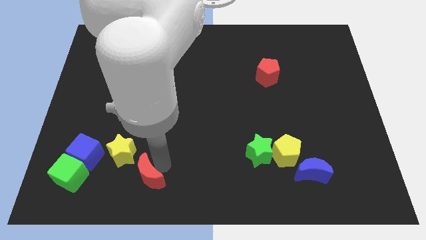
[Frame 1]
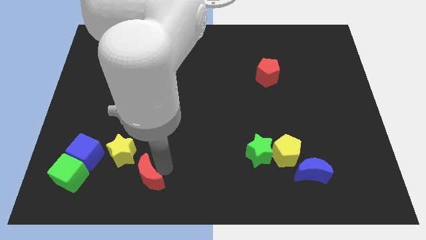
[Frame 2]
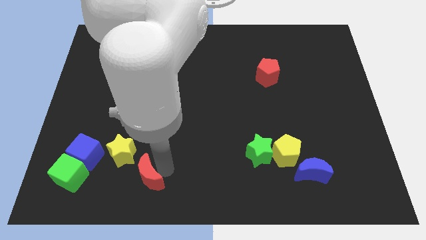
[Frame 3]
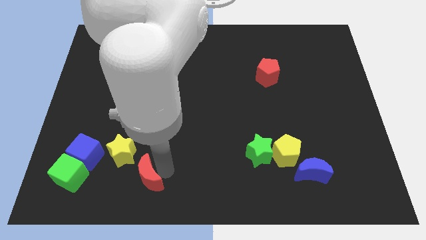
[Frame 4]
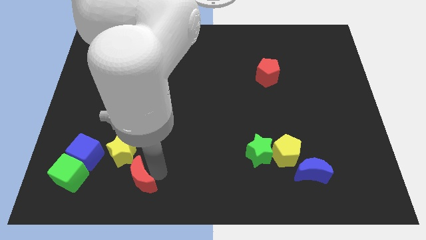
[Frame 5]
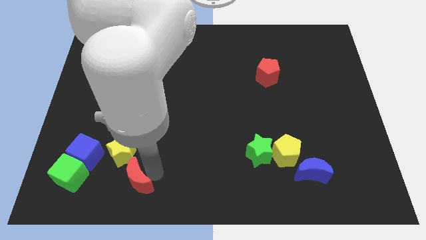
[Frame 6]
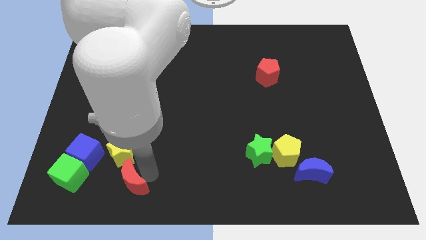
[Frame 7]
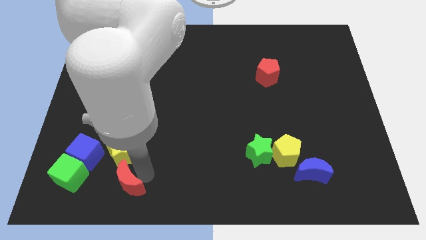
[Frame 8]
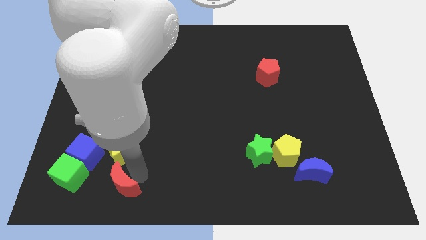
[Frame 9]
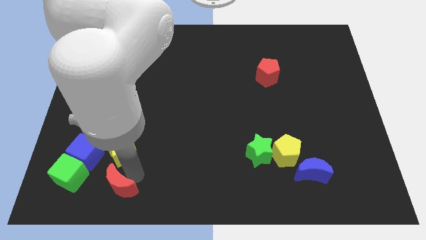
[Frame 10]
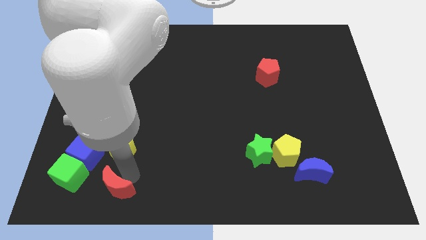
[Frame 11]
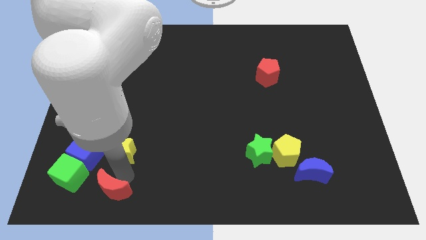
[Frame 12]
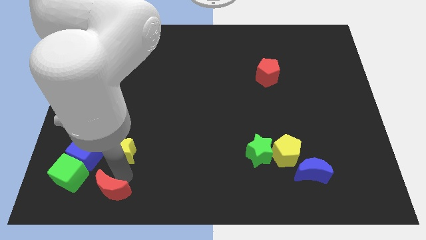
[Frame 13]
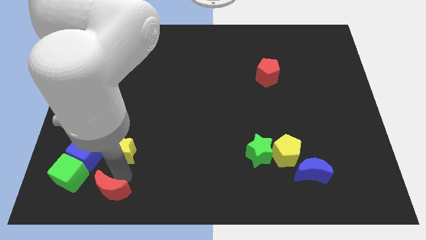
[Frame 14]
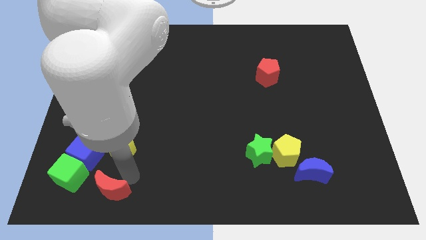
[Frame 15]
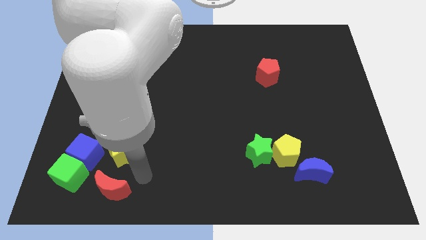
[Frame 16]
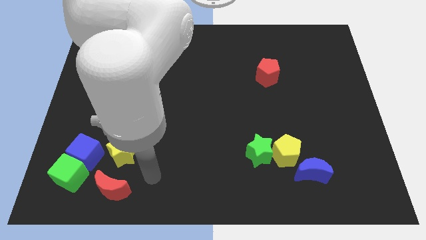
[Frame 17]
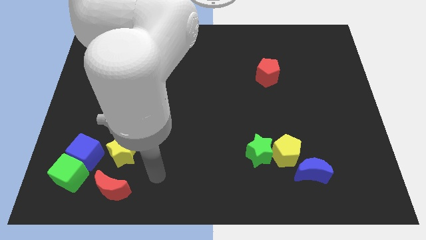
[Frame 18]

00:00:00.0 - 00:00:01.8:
move the red crescent to the right side of the green cube

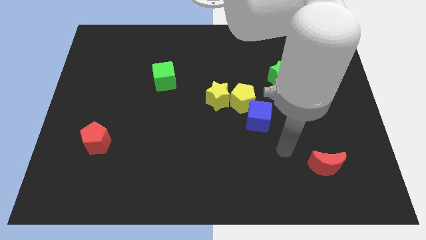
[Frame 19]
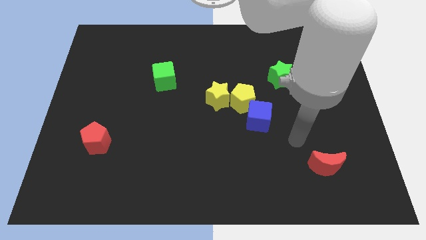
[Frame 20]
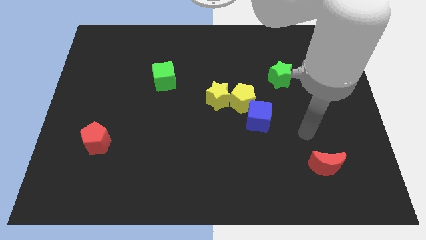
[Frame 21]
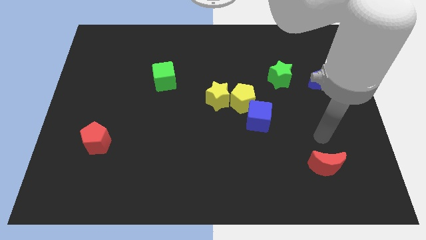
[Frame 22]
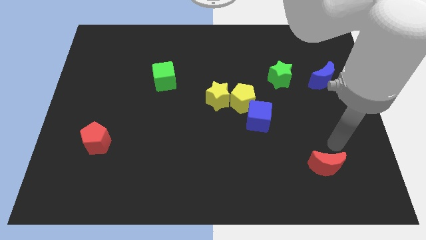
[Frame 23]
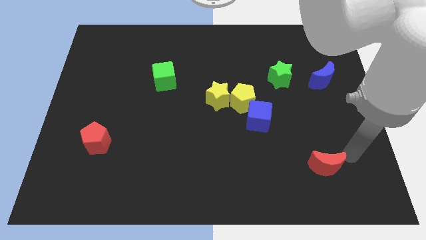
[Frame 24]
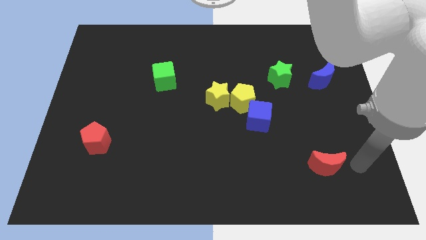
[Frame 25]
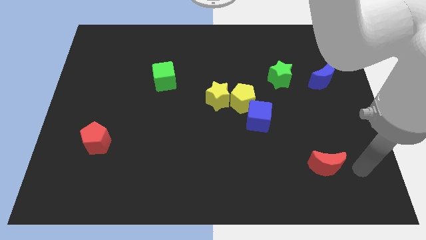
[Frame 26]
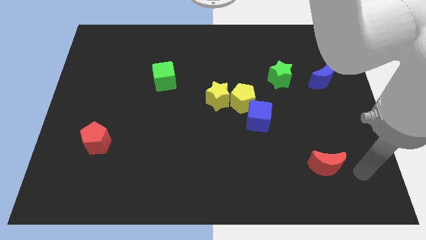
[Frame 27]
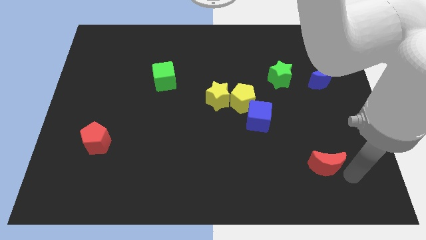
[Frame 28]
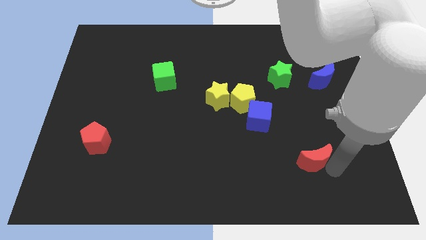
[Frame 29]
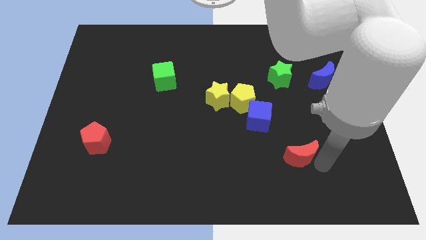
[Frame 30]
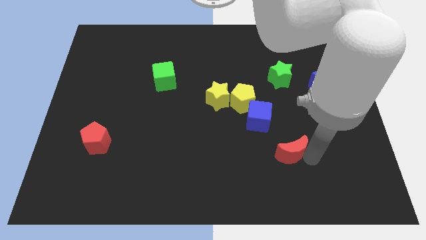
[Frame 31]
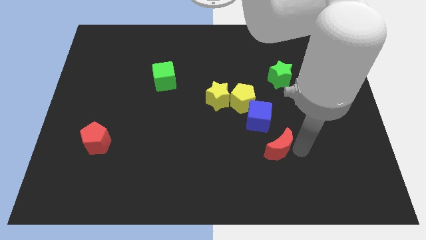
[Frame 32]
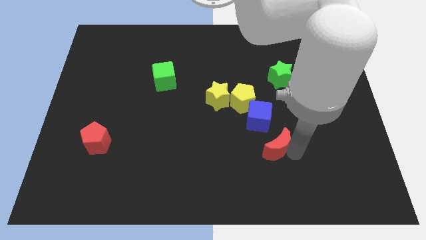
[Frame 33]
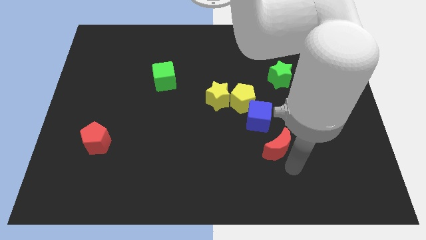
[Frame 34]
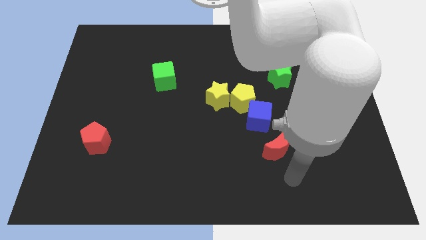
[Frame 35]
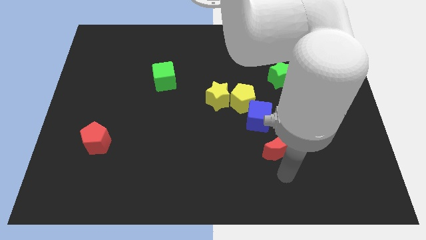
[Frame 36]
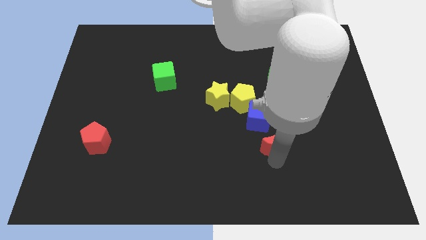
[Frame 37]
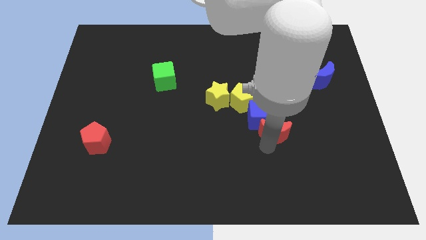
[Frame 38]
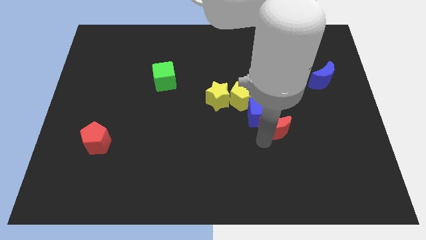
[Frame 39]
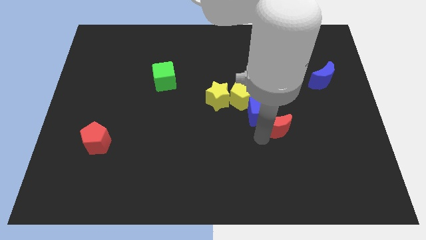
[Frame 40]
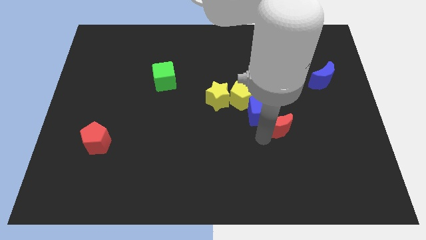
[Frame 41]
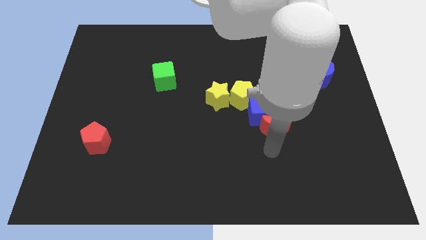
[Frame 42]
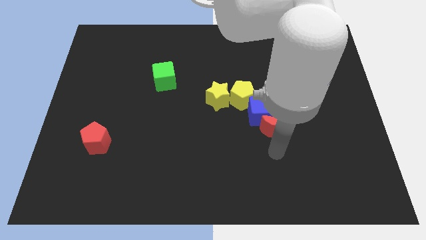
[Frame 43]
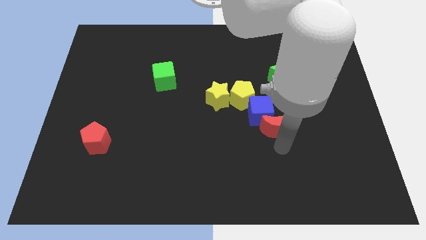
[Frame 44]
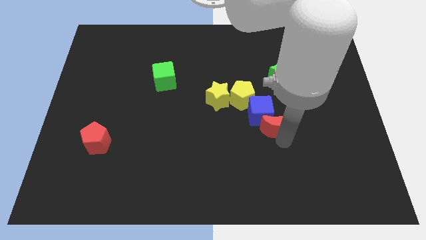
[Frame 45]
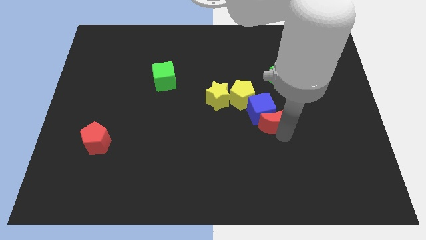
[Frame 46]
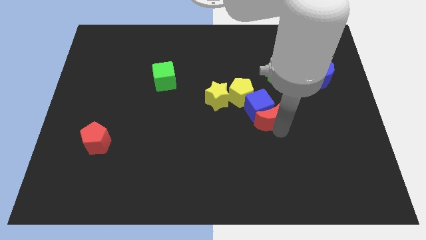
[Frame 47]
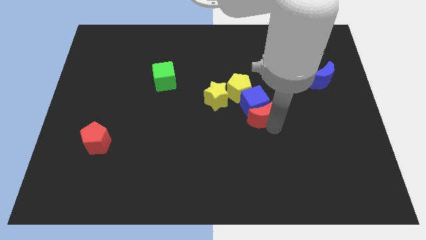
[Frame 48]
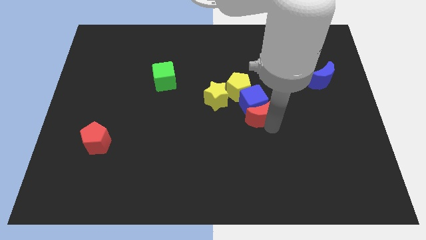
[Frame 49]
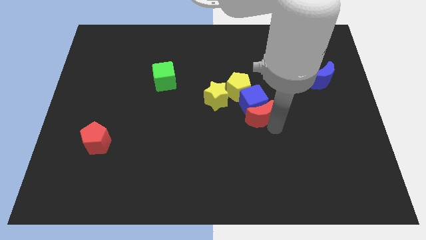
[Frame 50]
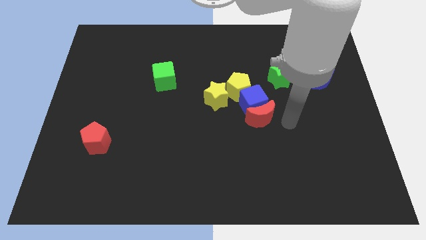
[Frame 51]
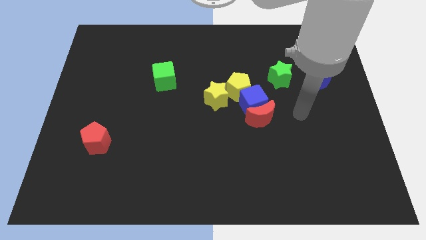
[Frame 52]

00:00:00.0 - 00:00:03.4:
push the red moon into the blue cube of the board

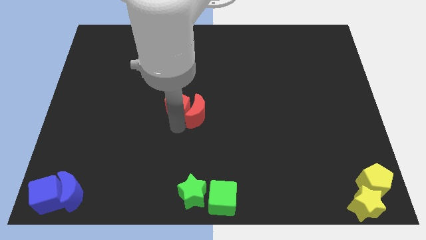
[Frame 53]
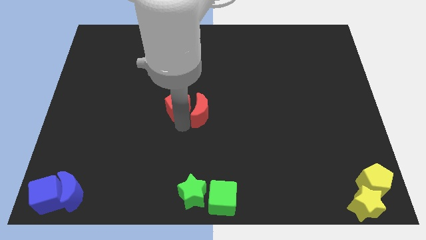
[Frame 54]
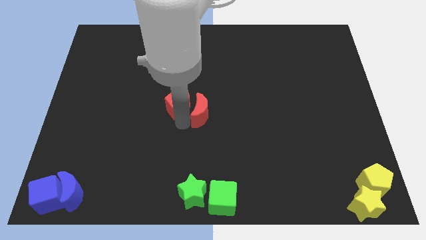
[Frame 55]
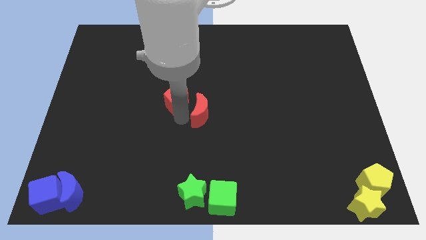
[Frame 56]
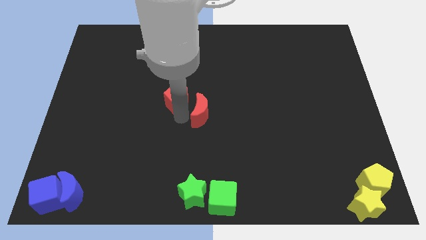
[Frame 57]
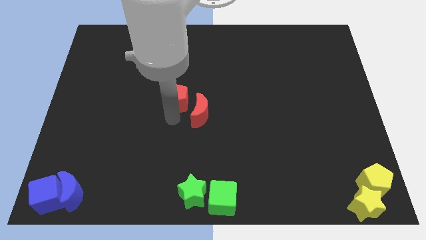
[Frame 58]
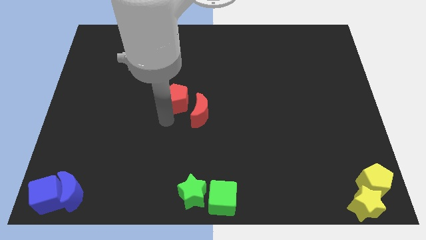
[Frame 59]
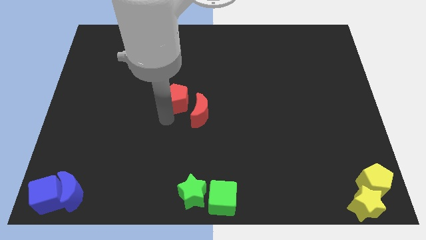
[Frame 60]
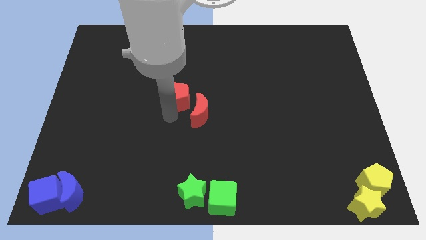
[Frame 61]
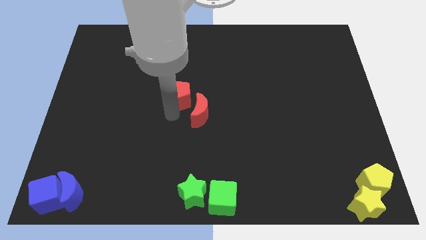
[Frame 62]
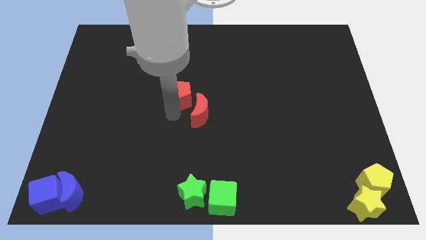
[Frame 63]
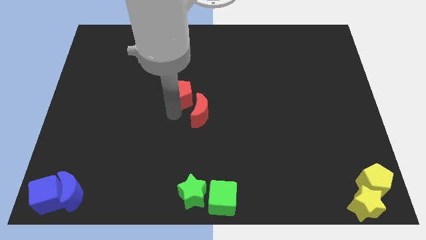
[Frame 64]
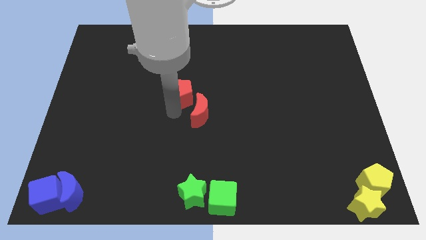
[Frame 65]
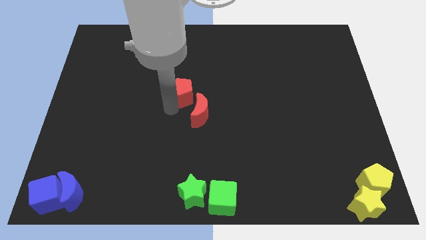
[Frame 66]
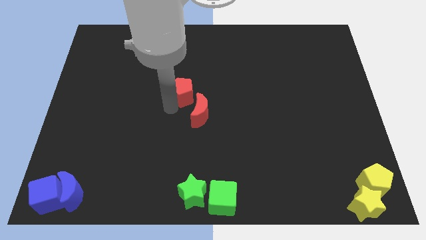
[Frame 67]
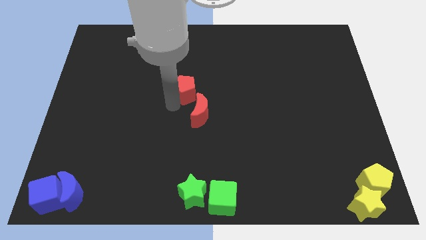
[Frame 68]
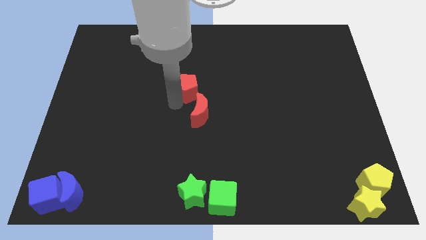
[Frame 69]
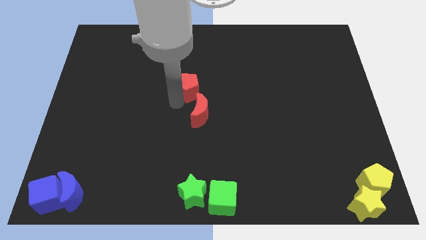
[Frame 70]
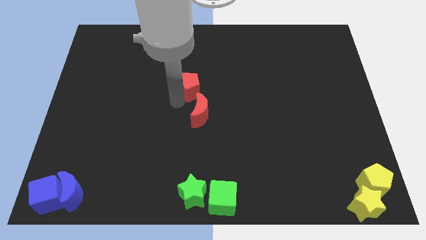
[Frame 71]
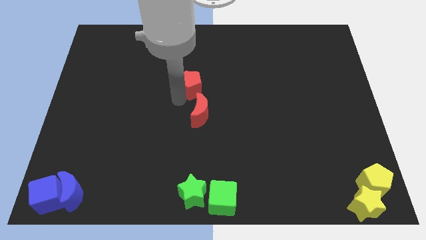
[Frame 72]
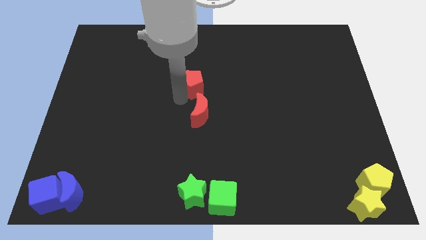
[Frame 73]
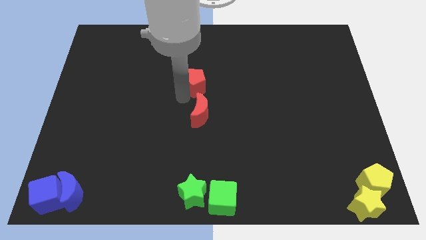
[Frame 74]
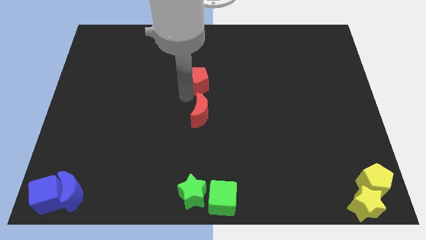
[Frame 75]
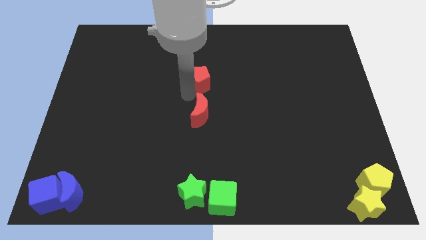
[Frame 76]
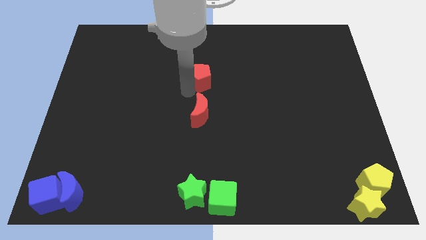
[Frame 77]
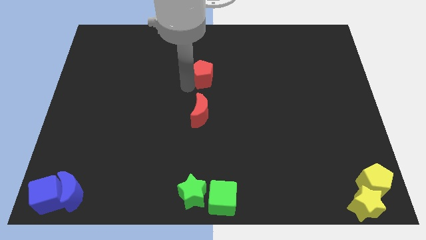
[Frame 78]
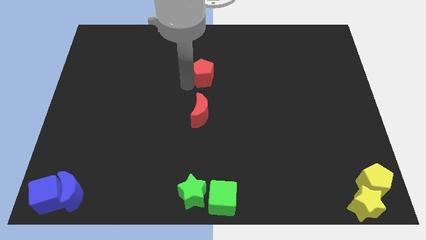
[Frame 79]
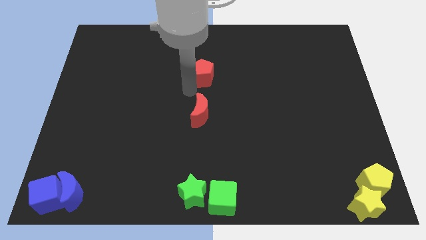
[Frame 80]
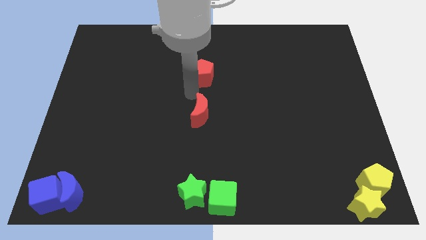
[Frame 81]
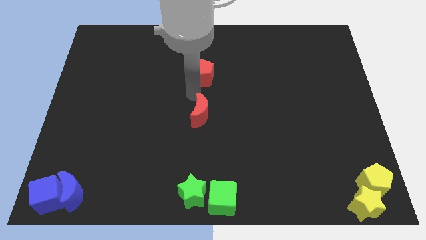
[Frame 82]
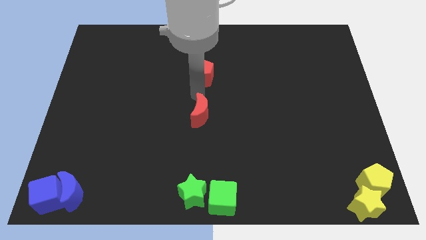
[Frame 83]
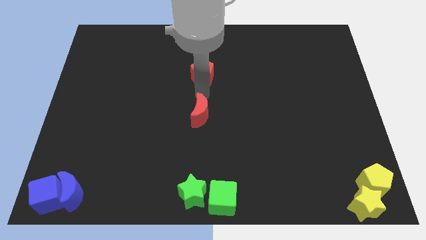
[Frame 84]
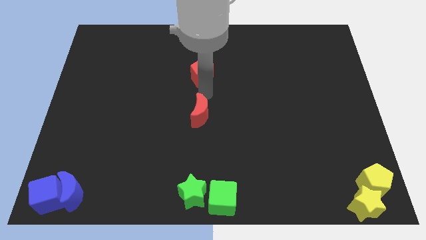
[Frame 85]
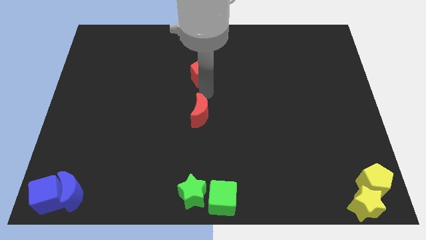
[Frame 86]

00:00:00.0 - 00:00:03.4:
push red pentagon above red crescent

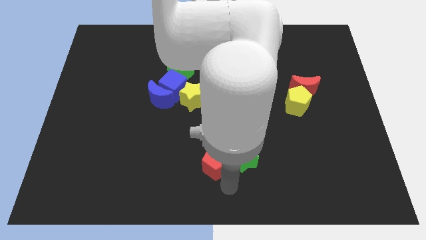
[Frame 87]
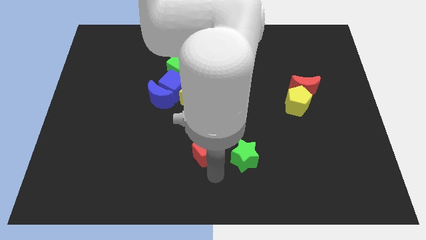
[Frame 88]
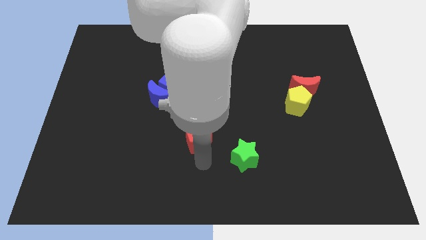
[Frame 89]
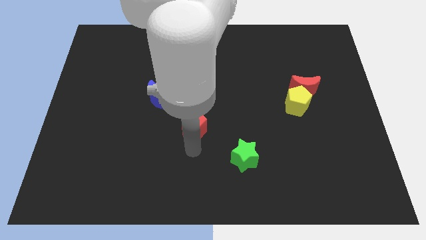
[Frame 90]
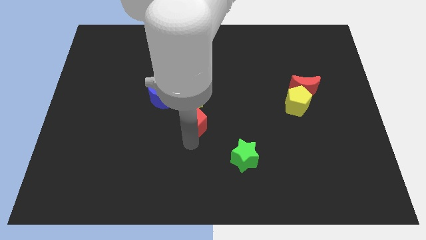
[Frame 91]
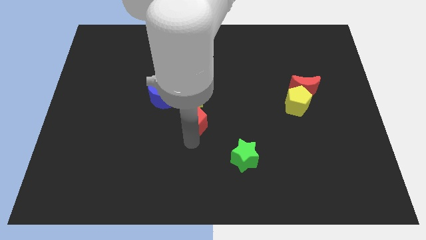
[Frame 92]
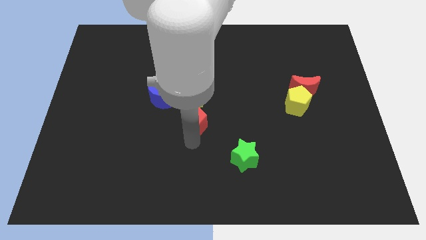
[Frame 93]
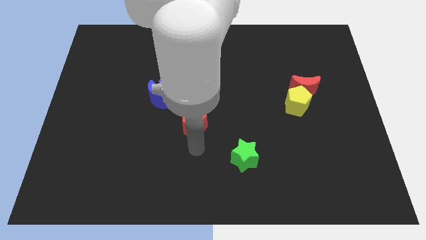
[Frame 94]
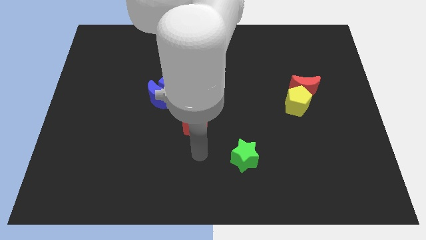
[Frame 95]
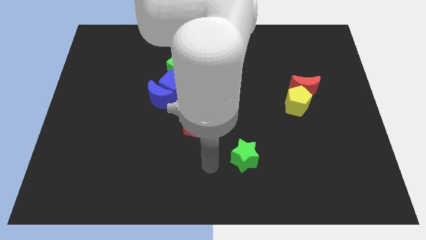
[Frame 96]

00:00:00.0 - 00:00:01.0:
place the red pentagon below the yellow star
